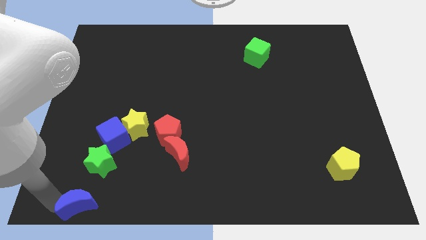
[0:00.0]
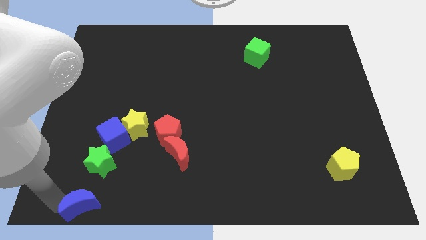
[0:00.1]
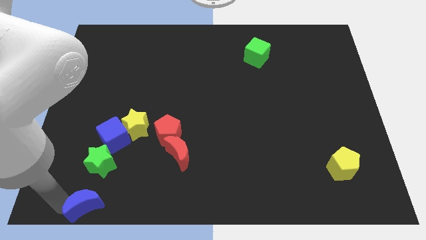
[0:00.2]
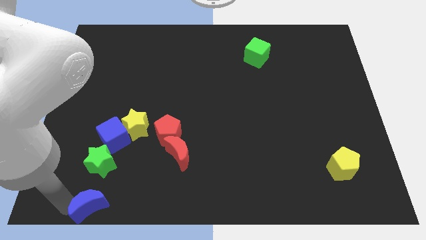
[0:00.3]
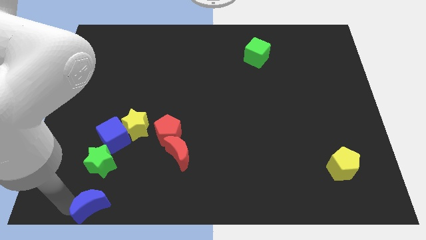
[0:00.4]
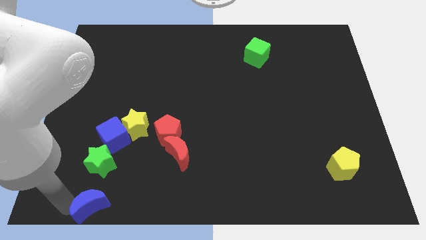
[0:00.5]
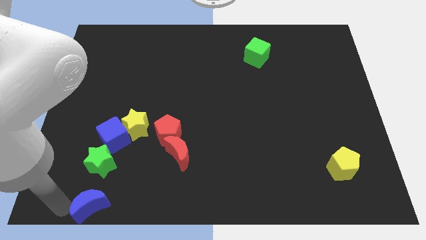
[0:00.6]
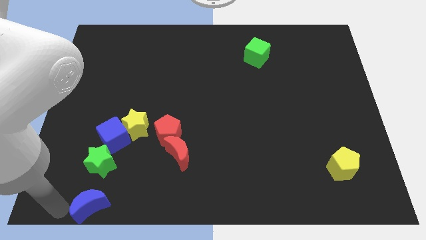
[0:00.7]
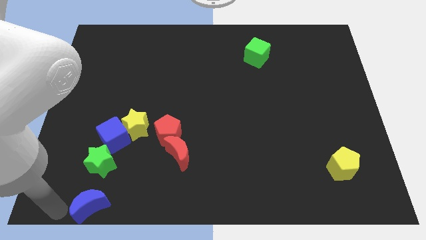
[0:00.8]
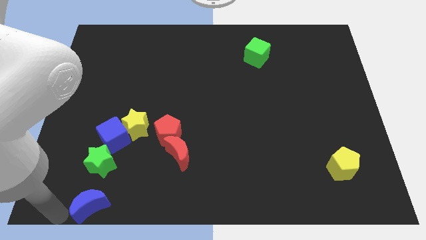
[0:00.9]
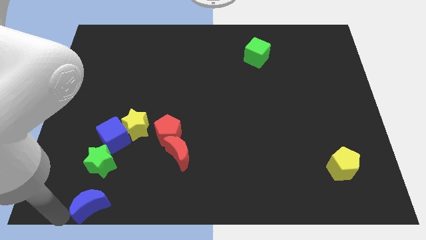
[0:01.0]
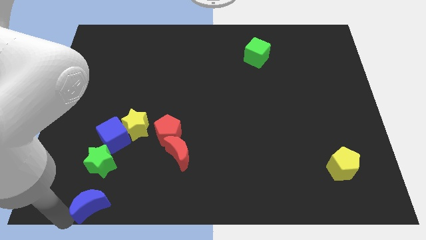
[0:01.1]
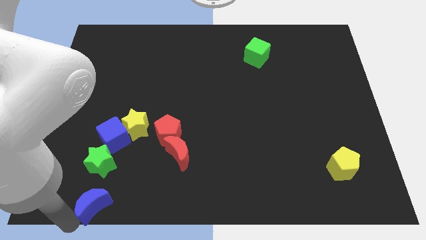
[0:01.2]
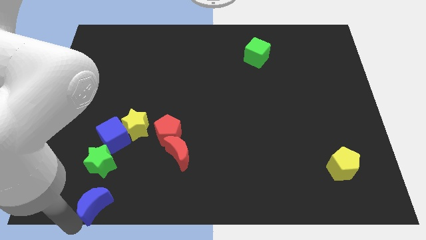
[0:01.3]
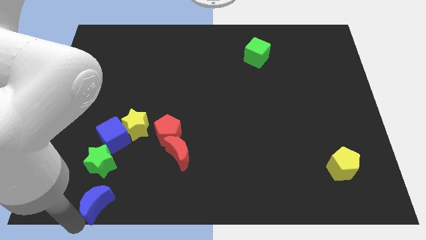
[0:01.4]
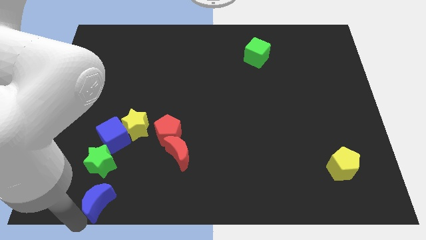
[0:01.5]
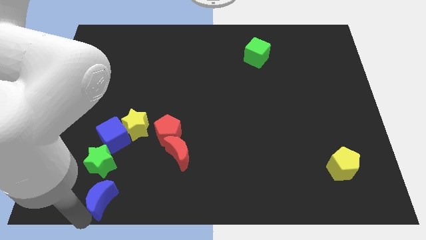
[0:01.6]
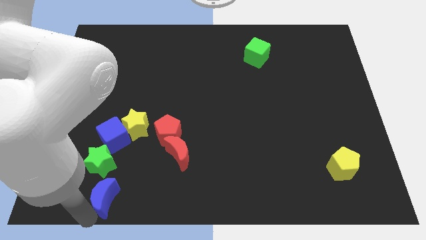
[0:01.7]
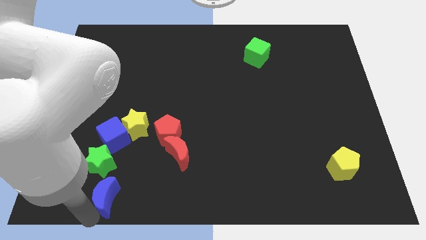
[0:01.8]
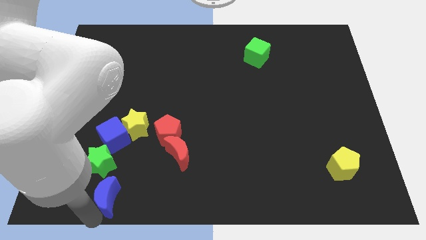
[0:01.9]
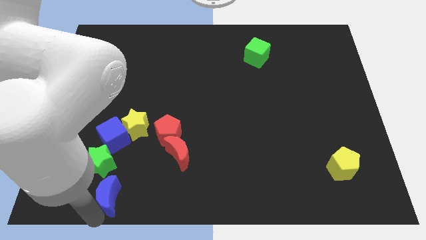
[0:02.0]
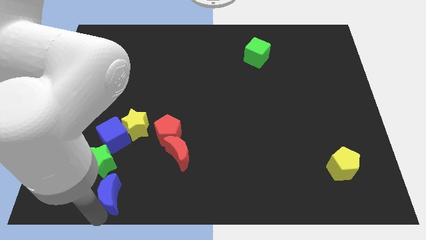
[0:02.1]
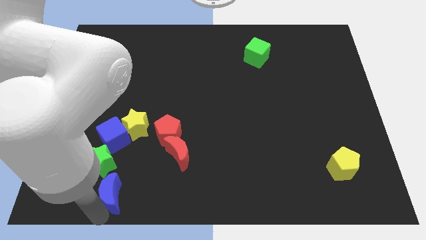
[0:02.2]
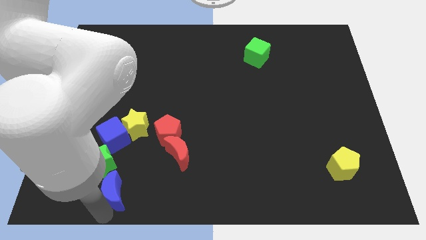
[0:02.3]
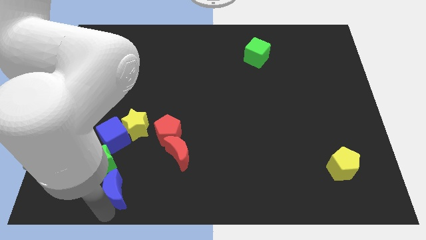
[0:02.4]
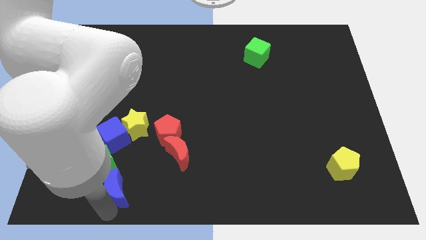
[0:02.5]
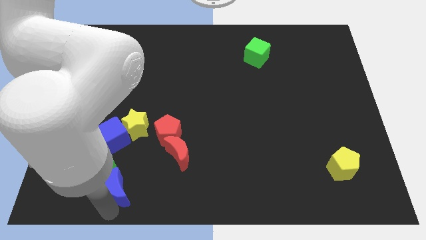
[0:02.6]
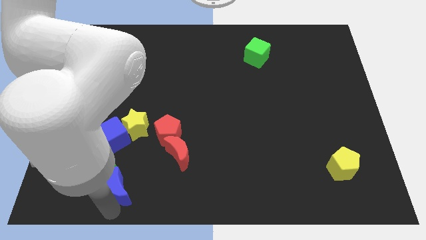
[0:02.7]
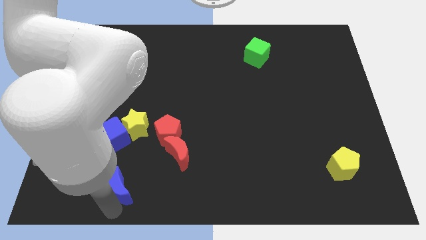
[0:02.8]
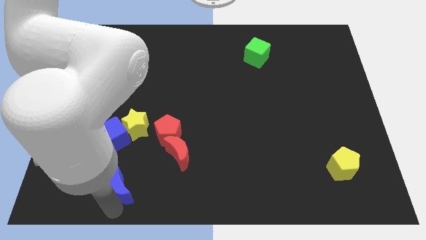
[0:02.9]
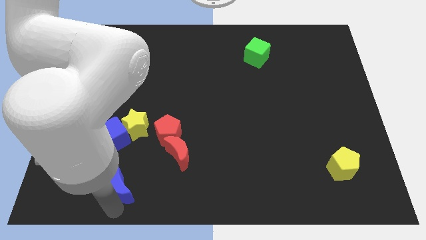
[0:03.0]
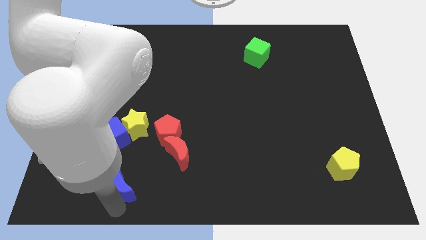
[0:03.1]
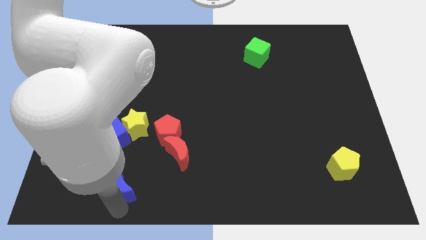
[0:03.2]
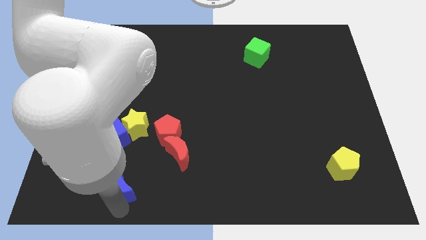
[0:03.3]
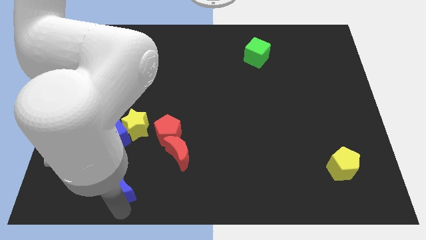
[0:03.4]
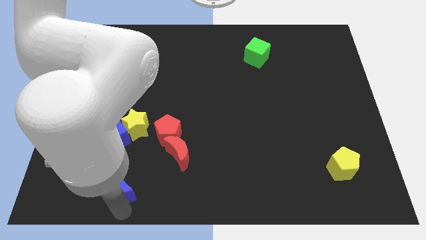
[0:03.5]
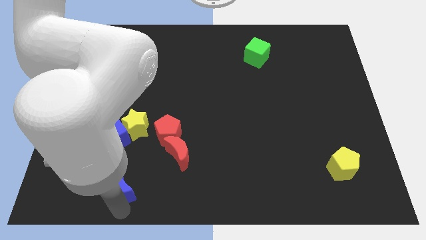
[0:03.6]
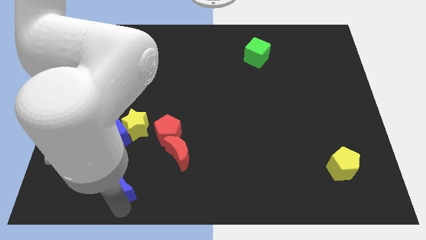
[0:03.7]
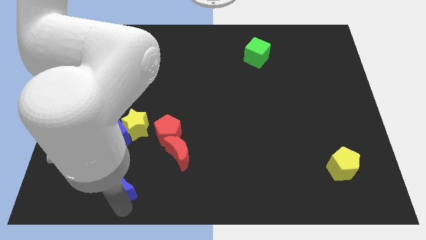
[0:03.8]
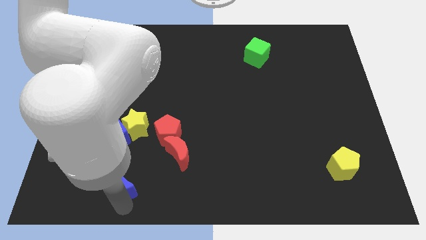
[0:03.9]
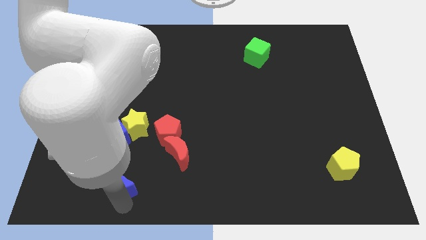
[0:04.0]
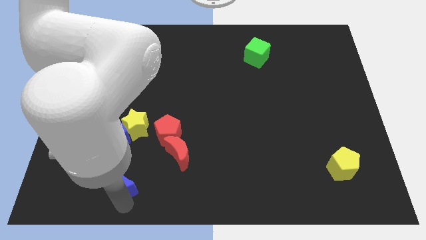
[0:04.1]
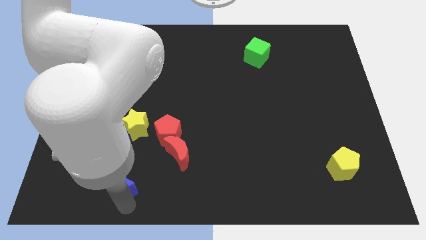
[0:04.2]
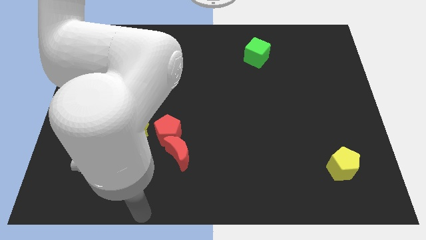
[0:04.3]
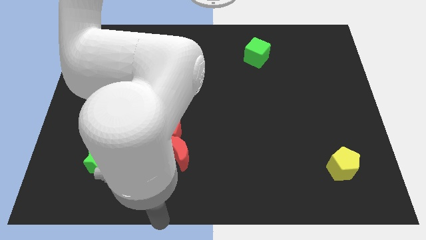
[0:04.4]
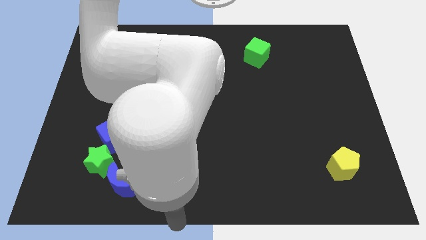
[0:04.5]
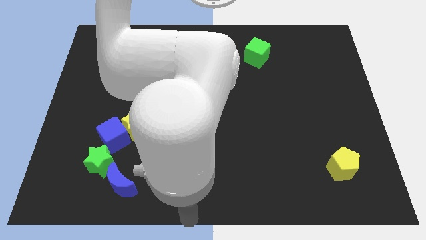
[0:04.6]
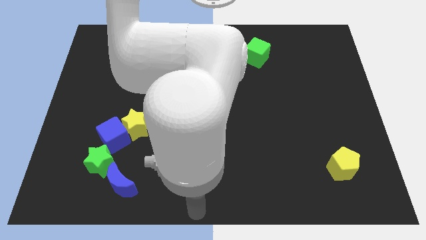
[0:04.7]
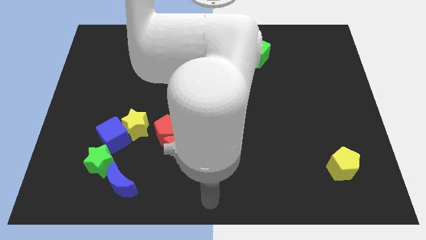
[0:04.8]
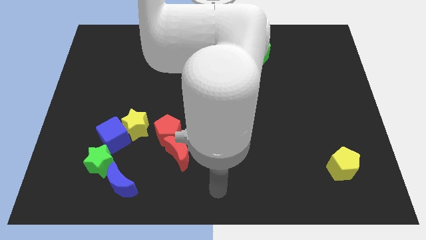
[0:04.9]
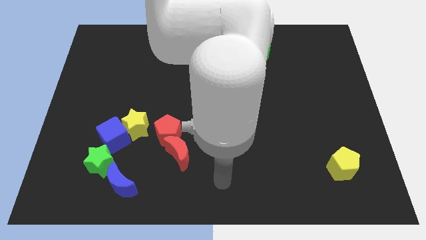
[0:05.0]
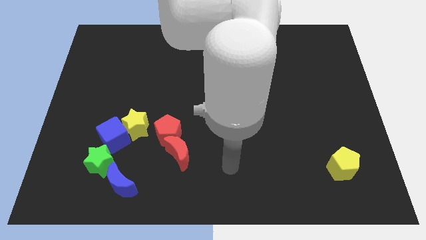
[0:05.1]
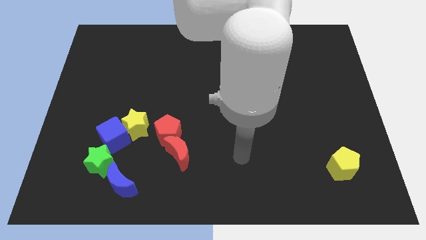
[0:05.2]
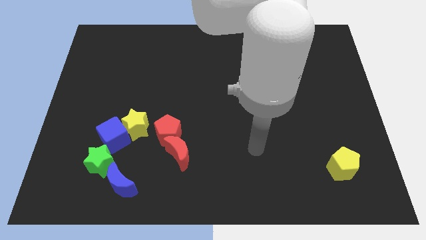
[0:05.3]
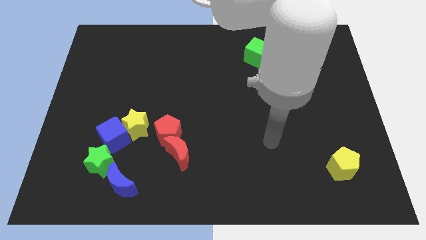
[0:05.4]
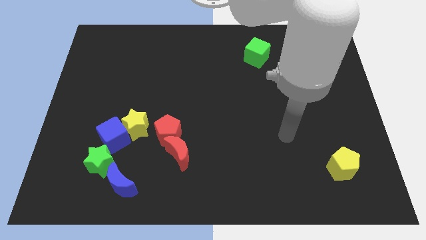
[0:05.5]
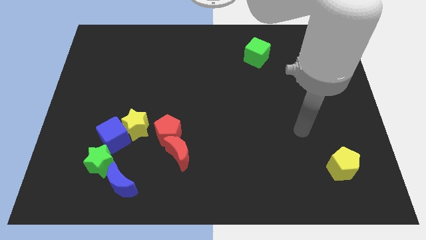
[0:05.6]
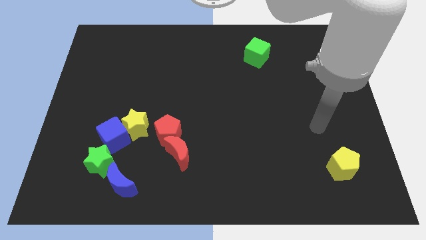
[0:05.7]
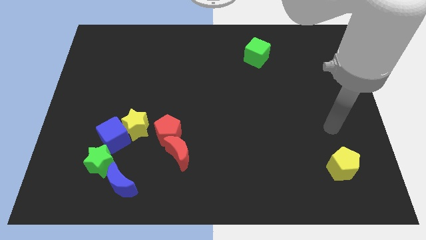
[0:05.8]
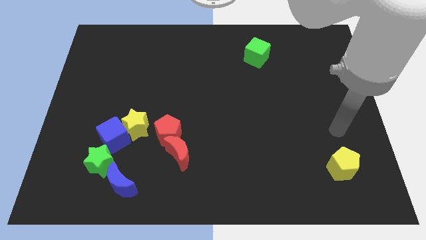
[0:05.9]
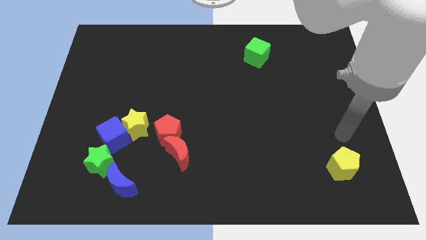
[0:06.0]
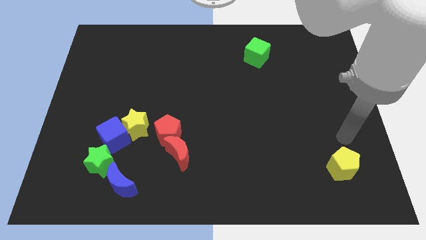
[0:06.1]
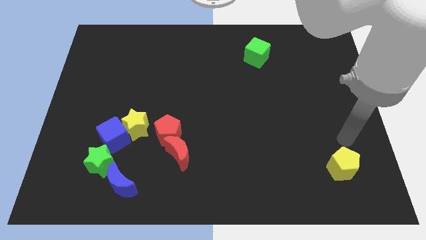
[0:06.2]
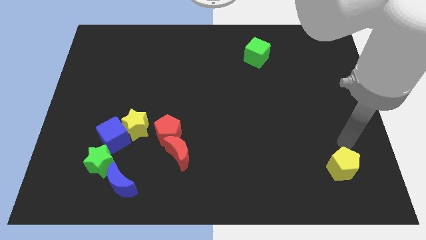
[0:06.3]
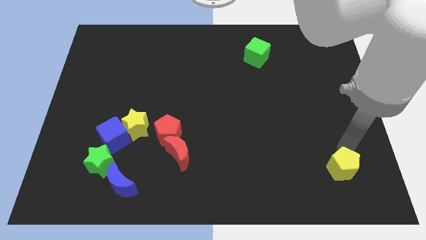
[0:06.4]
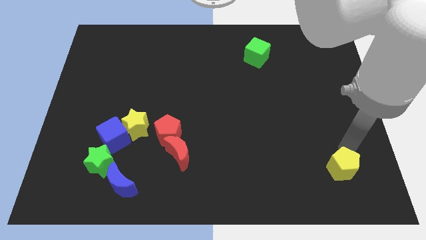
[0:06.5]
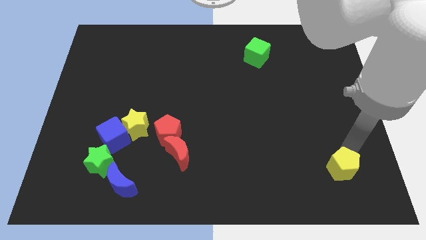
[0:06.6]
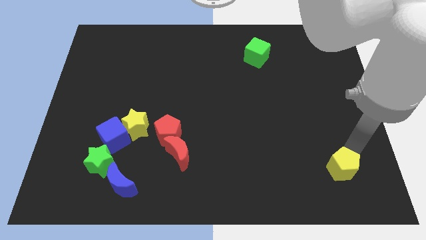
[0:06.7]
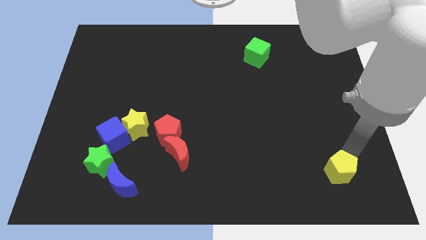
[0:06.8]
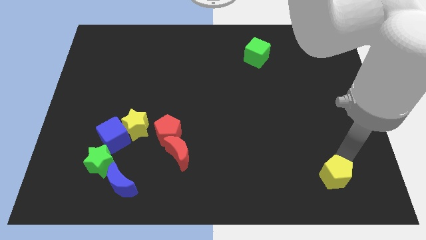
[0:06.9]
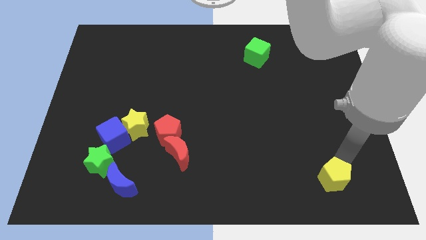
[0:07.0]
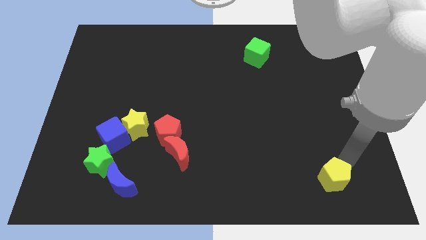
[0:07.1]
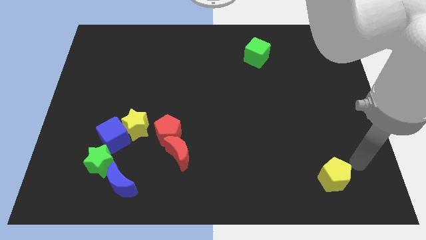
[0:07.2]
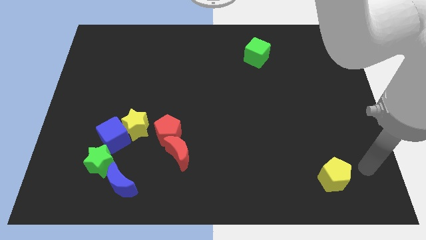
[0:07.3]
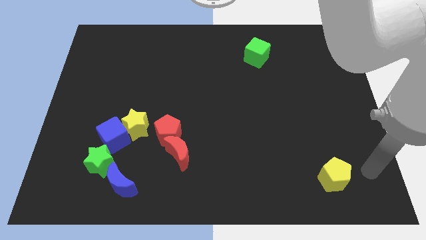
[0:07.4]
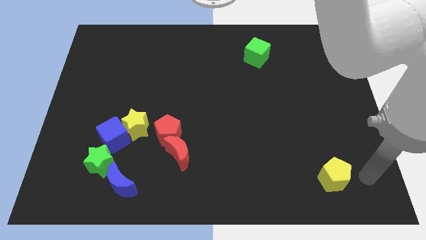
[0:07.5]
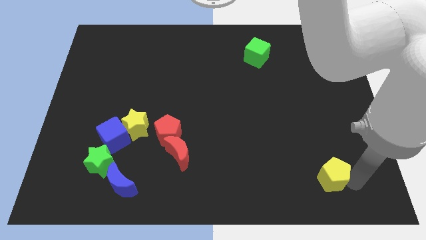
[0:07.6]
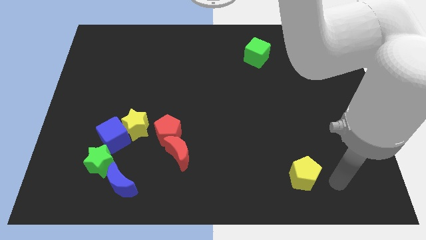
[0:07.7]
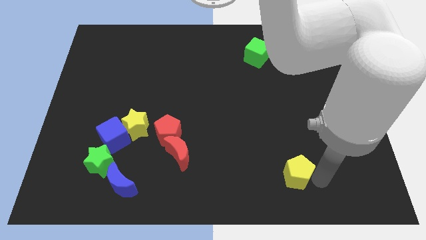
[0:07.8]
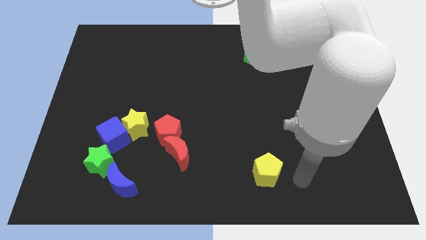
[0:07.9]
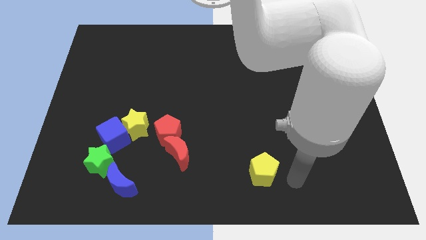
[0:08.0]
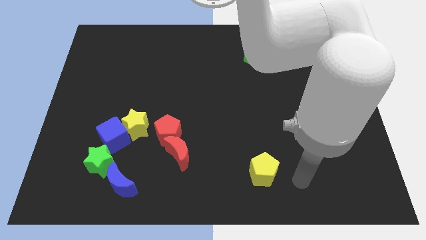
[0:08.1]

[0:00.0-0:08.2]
slightly push the yellow pentagon to the bottom center of the board

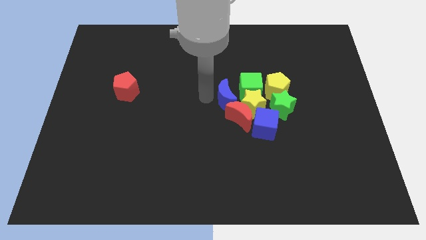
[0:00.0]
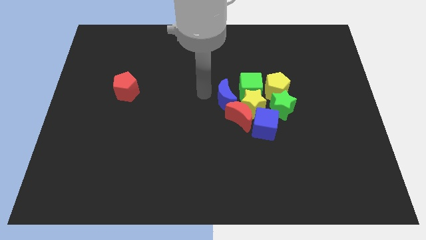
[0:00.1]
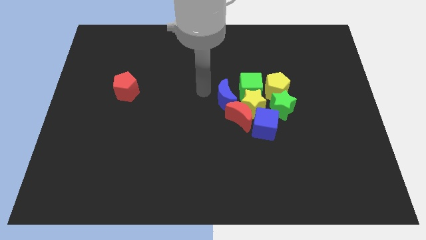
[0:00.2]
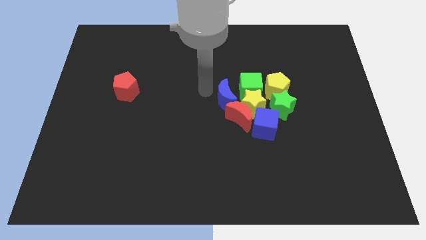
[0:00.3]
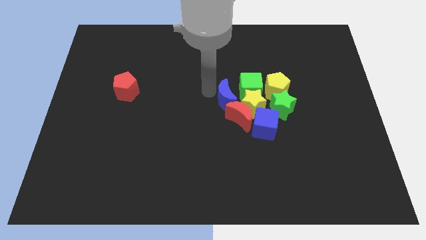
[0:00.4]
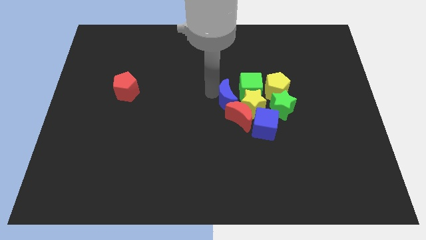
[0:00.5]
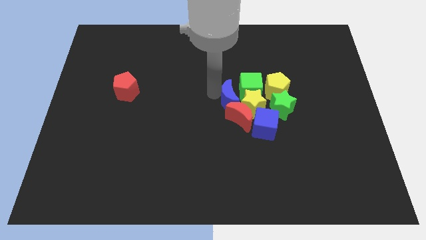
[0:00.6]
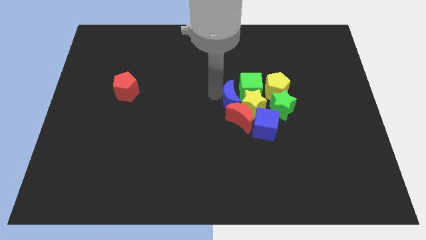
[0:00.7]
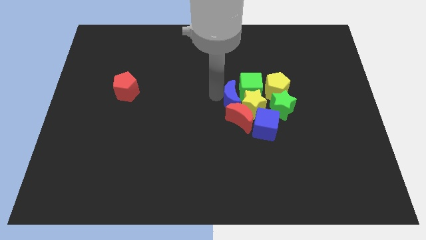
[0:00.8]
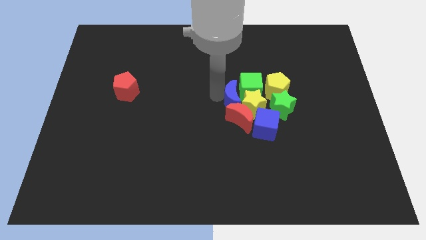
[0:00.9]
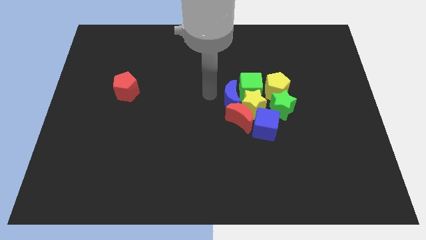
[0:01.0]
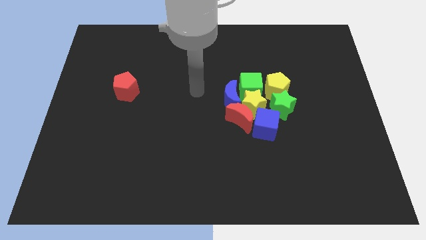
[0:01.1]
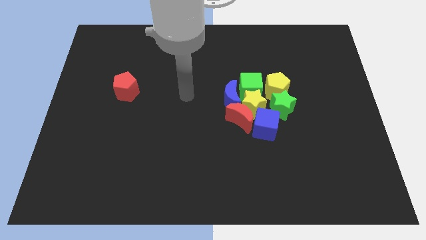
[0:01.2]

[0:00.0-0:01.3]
move blue moon in to green cube
